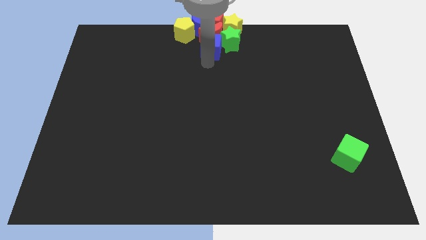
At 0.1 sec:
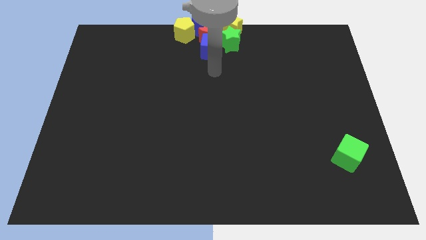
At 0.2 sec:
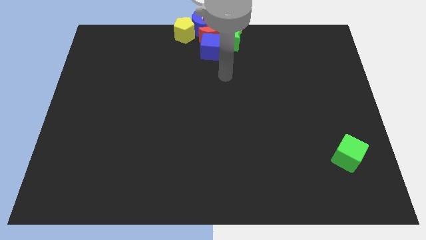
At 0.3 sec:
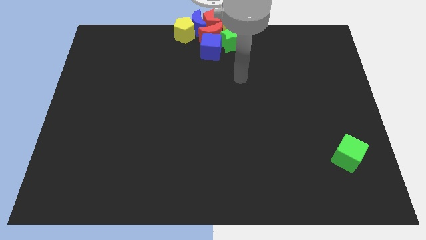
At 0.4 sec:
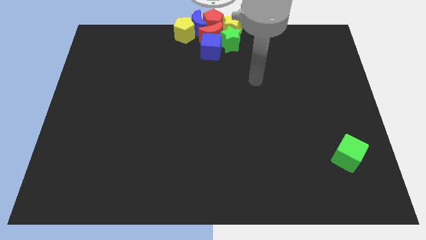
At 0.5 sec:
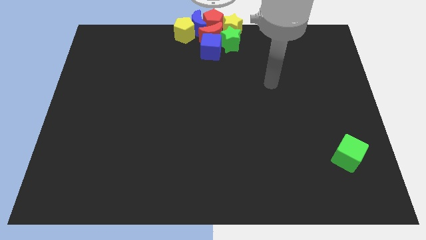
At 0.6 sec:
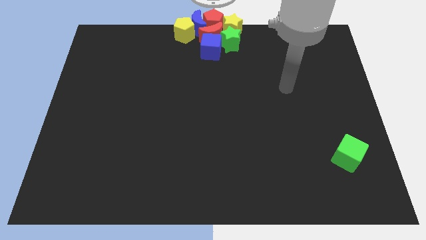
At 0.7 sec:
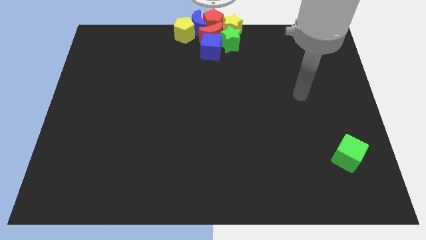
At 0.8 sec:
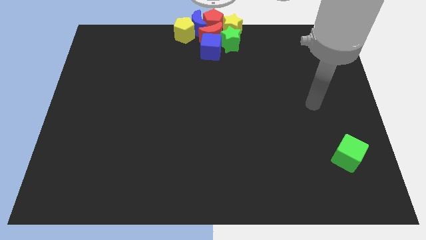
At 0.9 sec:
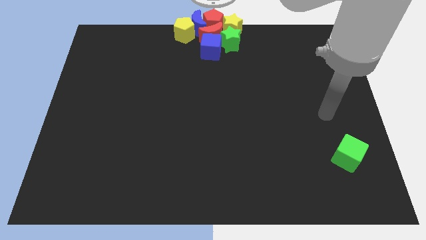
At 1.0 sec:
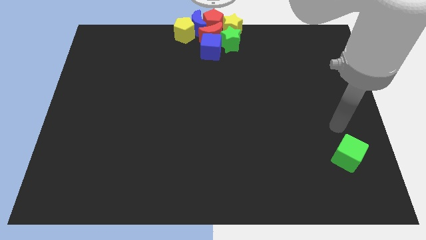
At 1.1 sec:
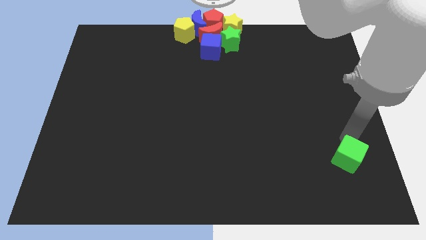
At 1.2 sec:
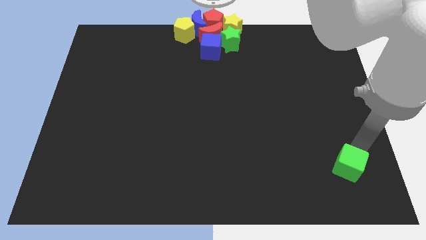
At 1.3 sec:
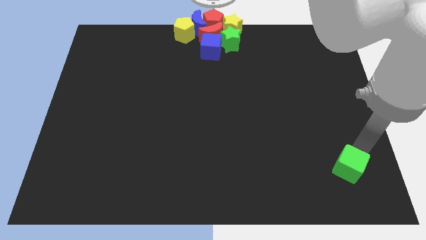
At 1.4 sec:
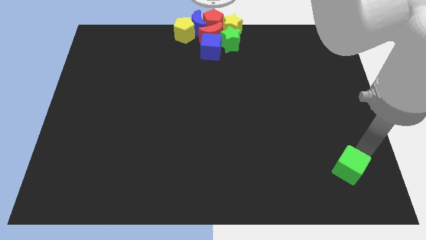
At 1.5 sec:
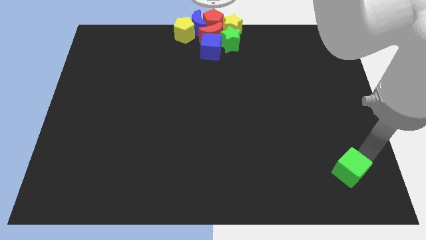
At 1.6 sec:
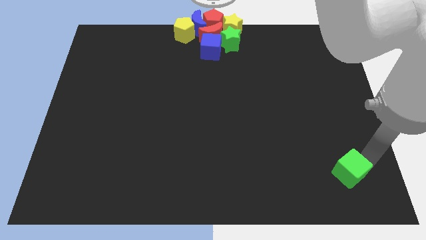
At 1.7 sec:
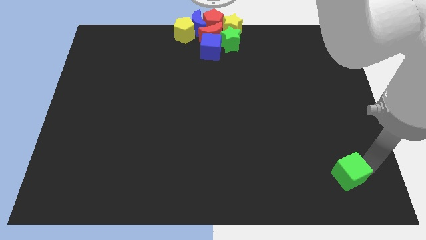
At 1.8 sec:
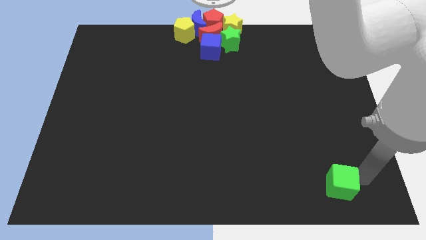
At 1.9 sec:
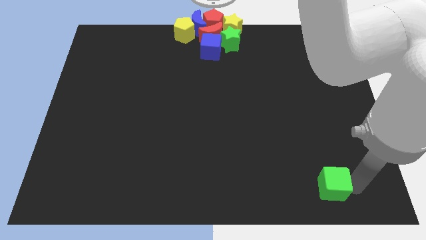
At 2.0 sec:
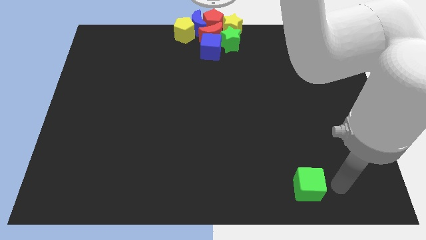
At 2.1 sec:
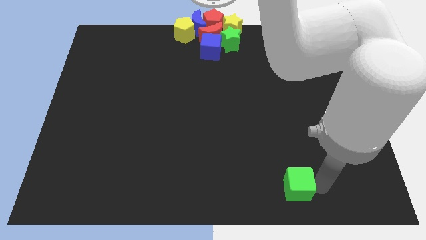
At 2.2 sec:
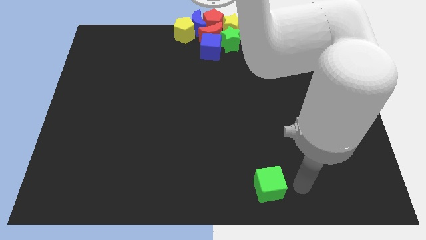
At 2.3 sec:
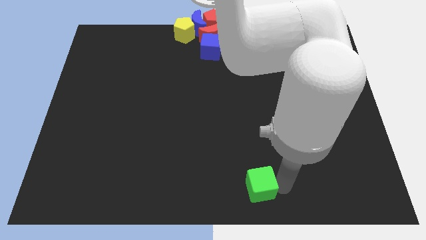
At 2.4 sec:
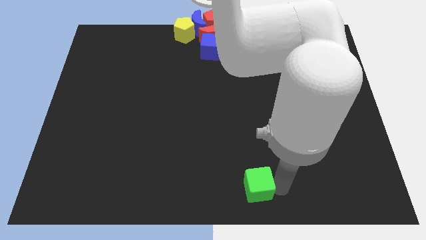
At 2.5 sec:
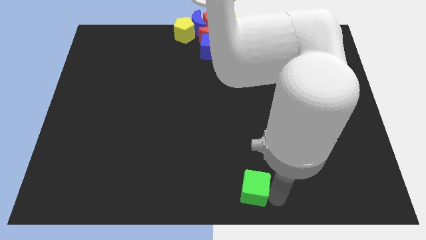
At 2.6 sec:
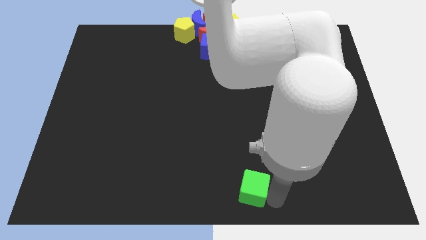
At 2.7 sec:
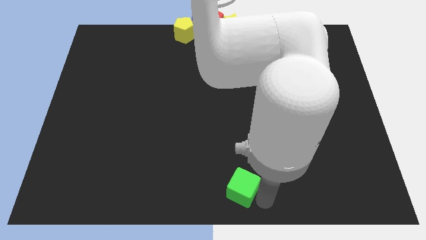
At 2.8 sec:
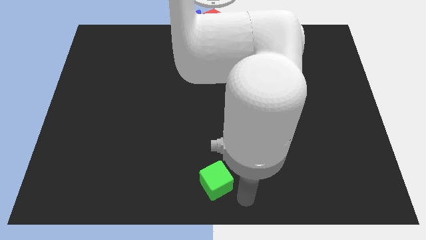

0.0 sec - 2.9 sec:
push the green cube to the bottom center

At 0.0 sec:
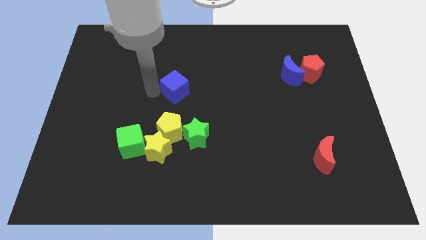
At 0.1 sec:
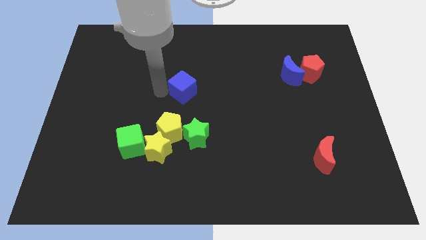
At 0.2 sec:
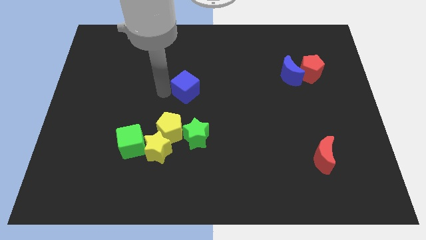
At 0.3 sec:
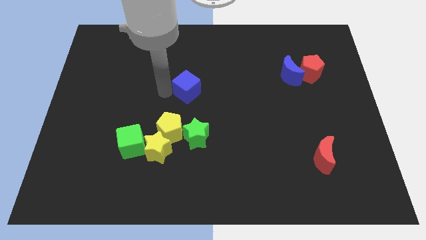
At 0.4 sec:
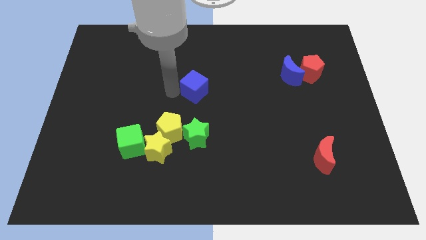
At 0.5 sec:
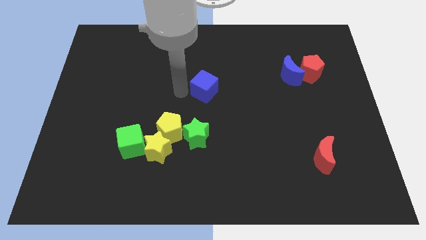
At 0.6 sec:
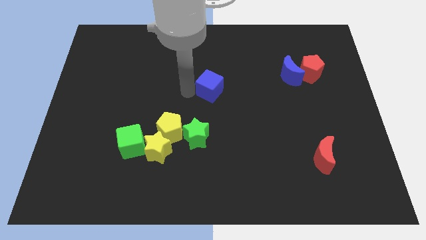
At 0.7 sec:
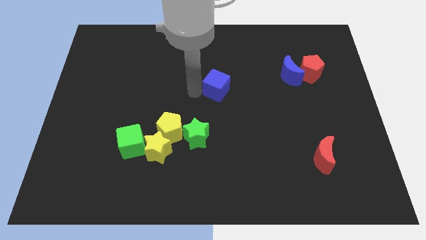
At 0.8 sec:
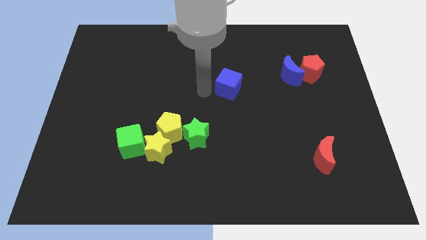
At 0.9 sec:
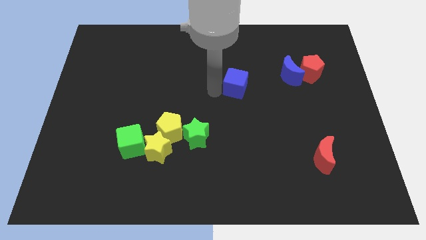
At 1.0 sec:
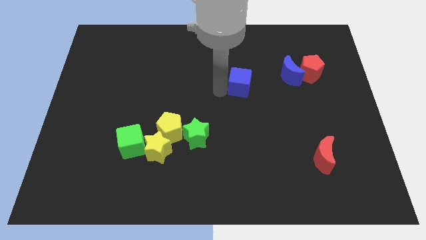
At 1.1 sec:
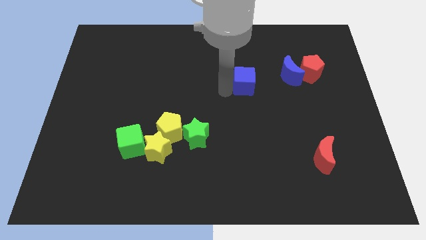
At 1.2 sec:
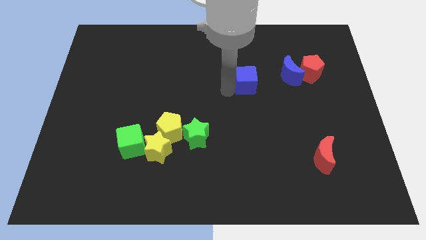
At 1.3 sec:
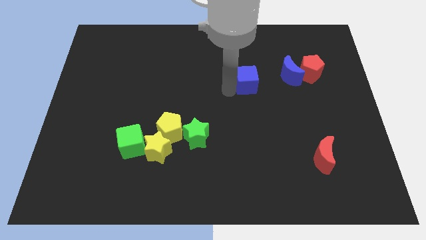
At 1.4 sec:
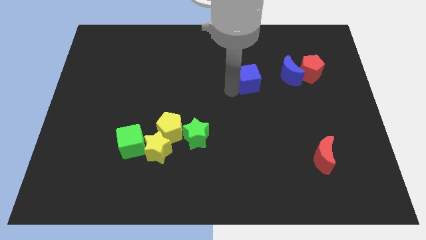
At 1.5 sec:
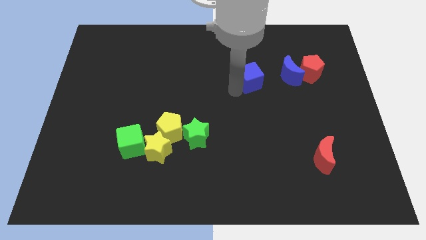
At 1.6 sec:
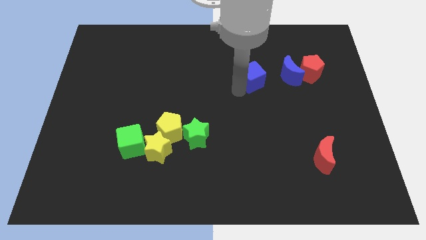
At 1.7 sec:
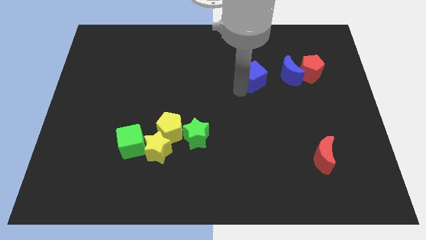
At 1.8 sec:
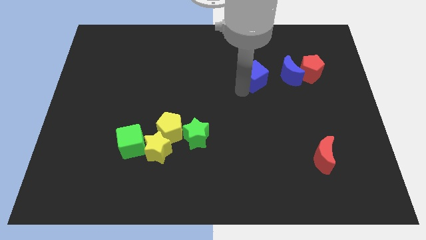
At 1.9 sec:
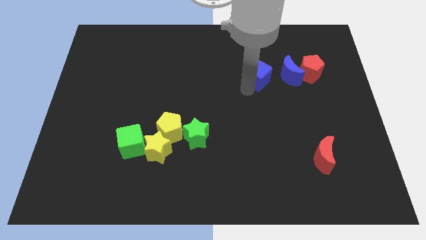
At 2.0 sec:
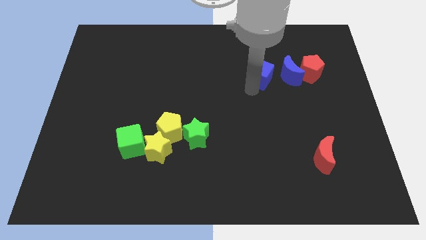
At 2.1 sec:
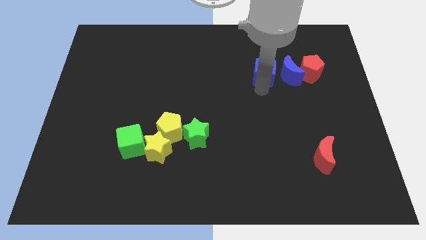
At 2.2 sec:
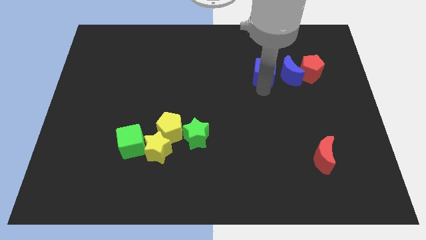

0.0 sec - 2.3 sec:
move the blue cube near to the blue moon

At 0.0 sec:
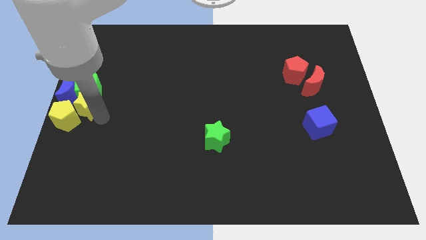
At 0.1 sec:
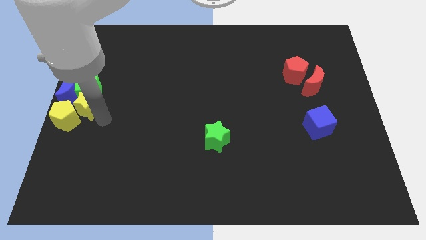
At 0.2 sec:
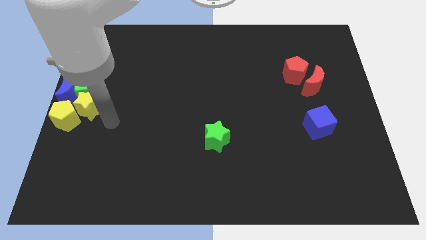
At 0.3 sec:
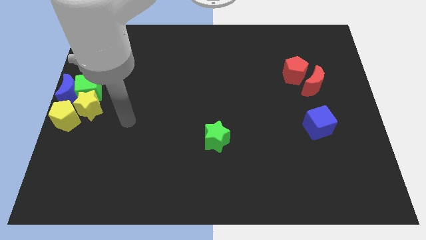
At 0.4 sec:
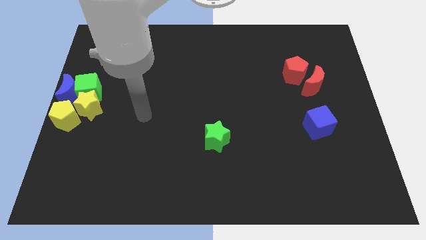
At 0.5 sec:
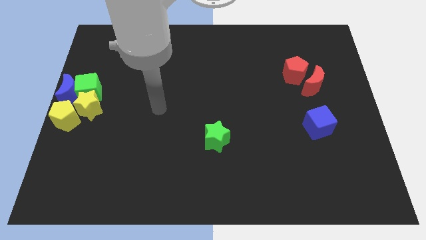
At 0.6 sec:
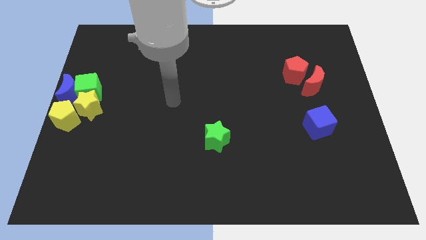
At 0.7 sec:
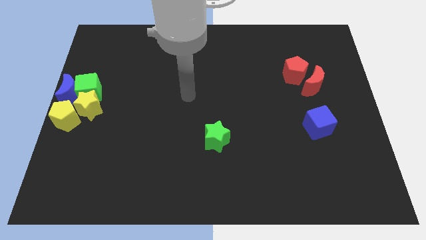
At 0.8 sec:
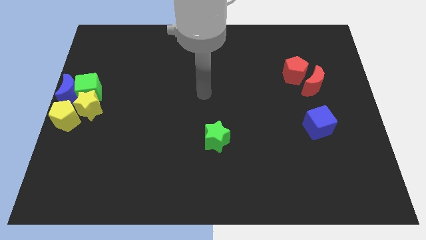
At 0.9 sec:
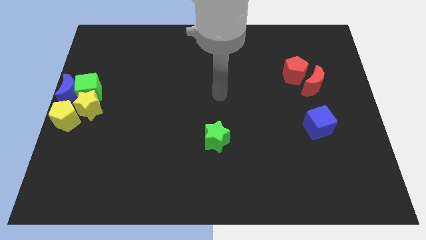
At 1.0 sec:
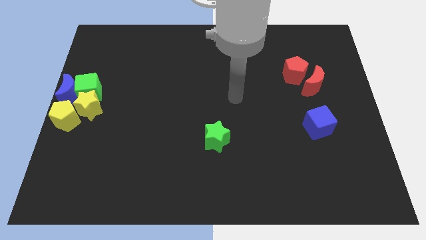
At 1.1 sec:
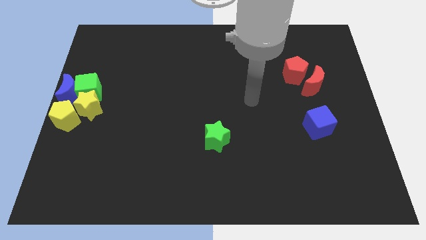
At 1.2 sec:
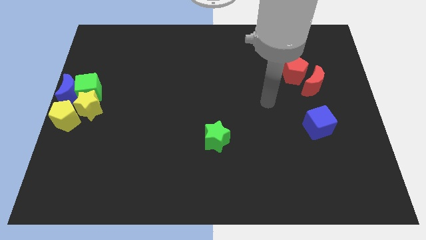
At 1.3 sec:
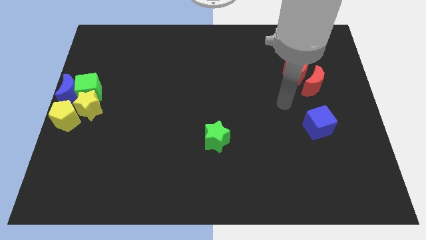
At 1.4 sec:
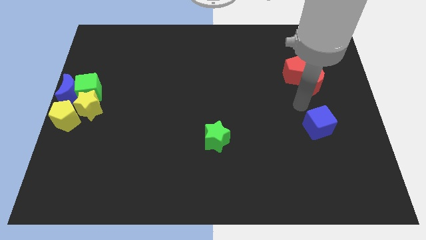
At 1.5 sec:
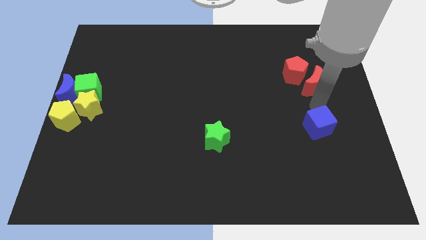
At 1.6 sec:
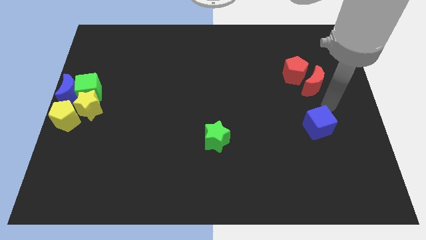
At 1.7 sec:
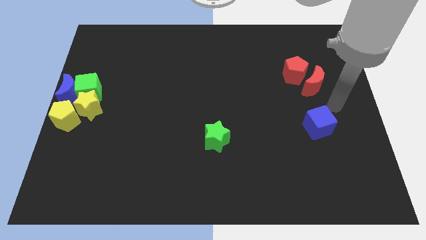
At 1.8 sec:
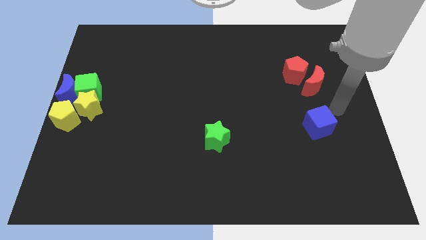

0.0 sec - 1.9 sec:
move your arm away from the yellow star

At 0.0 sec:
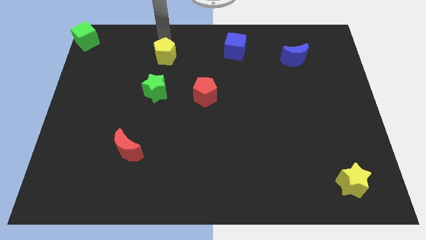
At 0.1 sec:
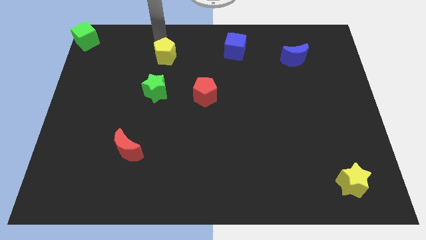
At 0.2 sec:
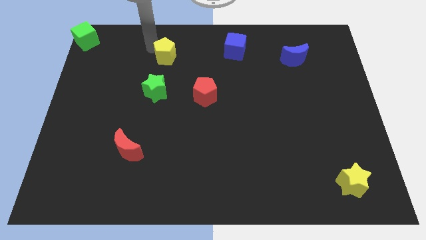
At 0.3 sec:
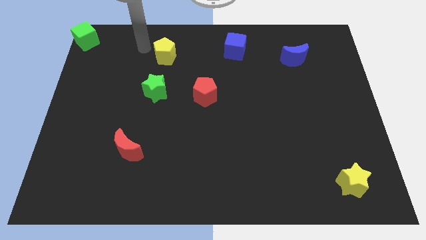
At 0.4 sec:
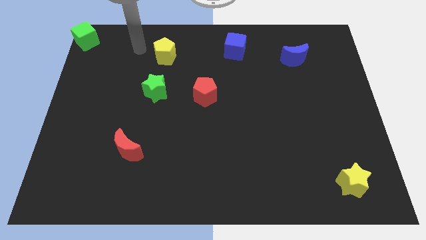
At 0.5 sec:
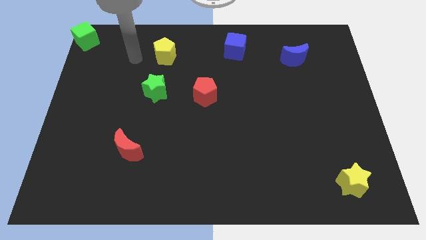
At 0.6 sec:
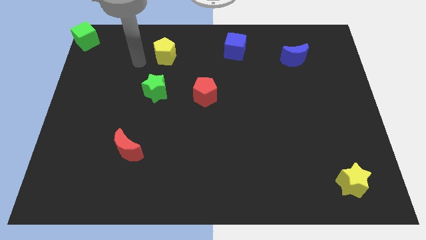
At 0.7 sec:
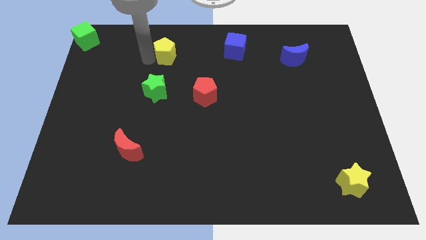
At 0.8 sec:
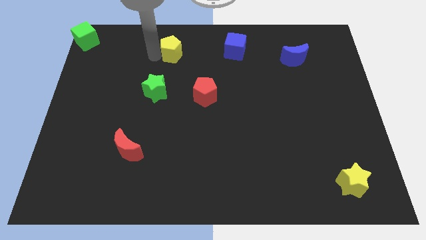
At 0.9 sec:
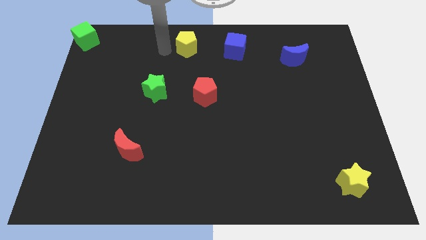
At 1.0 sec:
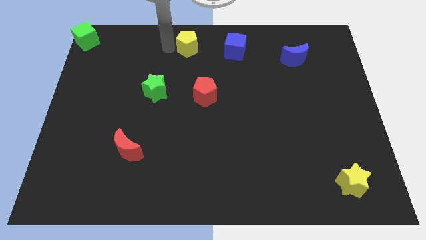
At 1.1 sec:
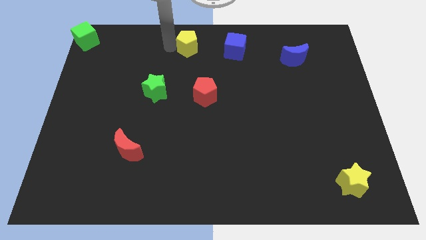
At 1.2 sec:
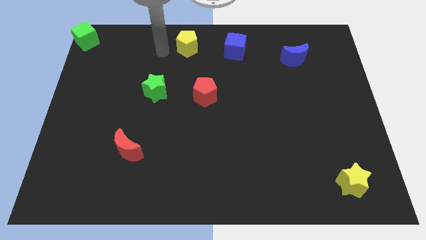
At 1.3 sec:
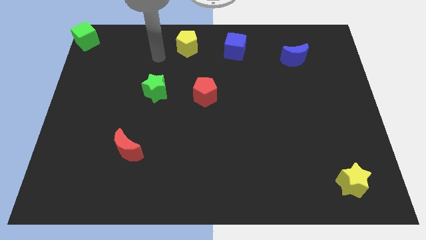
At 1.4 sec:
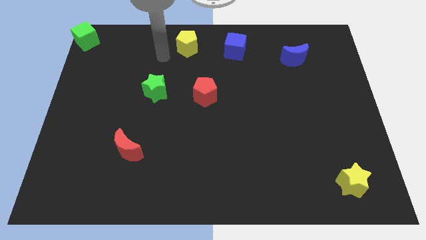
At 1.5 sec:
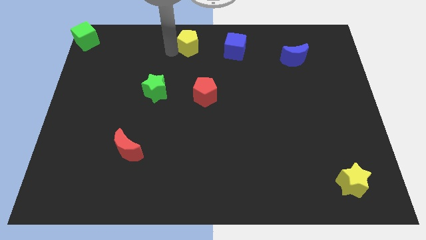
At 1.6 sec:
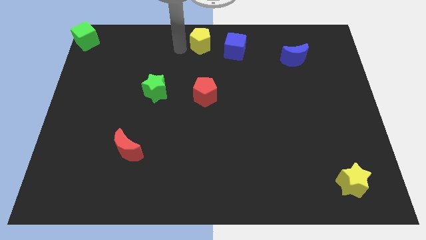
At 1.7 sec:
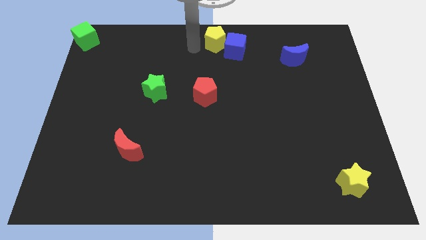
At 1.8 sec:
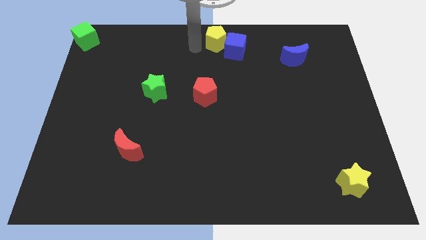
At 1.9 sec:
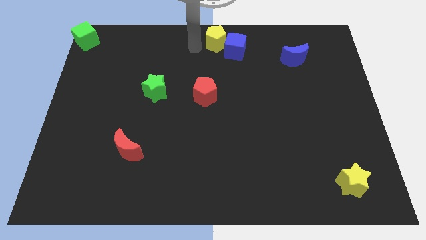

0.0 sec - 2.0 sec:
push the yellow pentagon into the blue cube
